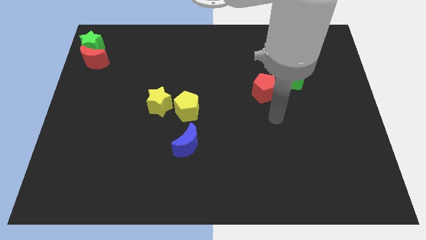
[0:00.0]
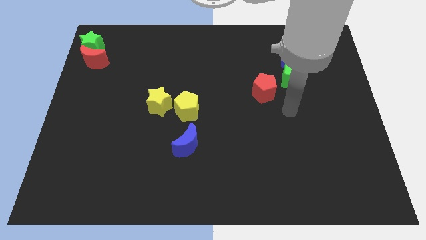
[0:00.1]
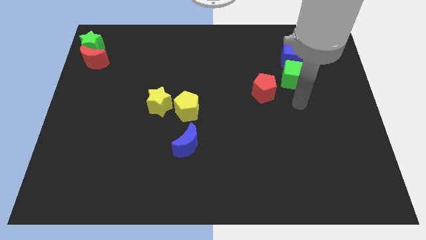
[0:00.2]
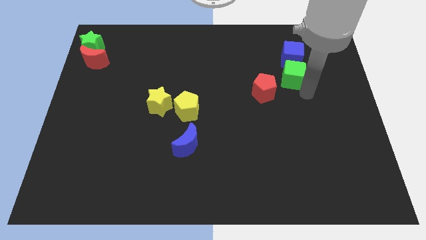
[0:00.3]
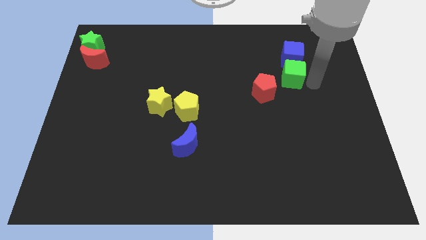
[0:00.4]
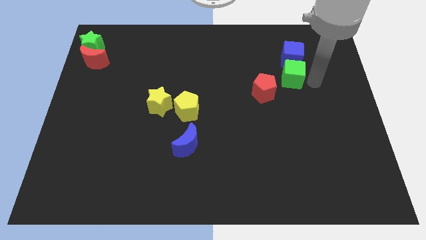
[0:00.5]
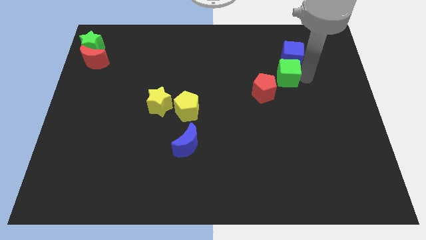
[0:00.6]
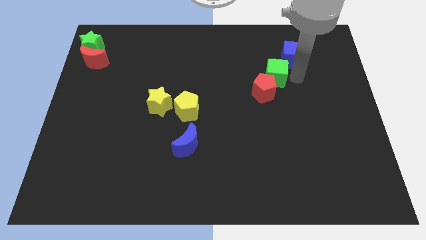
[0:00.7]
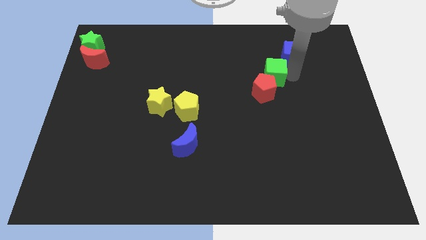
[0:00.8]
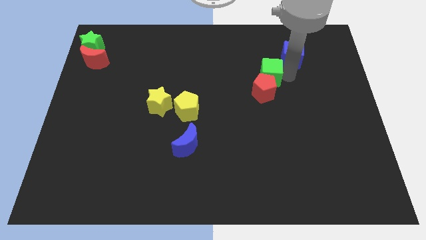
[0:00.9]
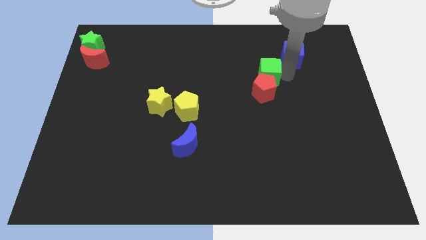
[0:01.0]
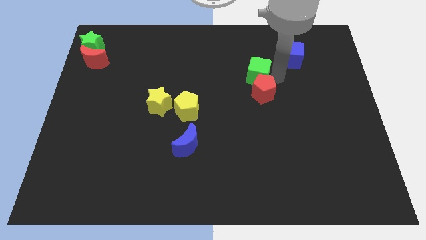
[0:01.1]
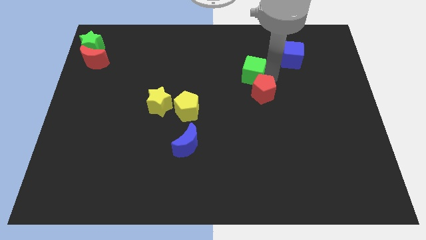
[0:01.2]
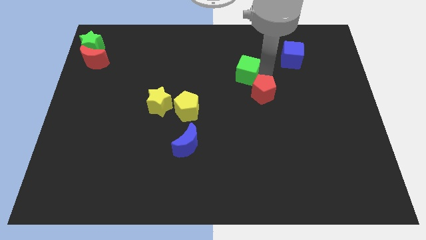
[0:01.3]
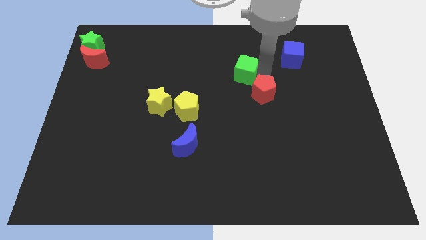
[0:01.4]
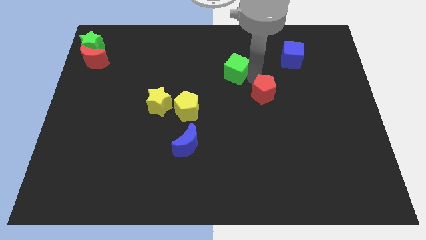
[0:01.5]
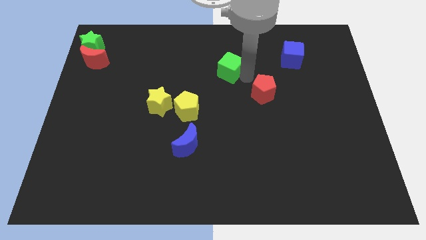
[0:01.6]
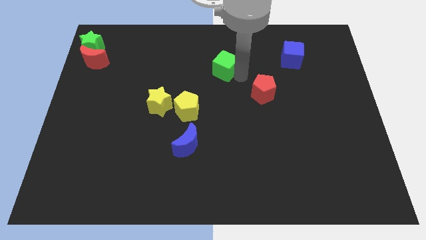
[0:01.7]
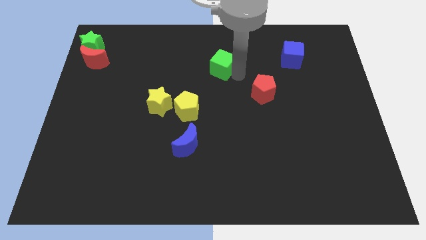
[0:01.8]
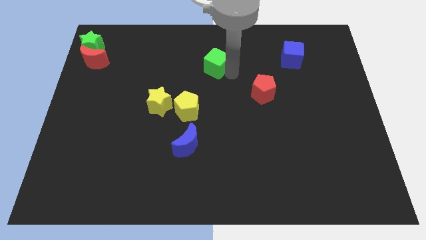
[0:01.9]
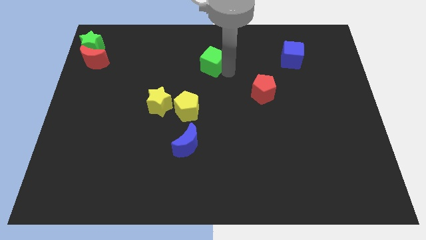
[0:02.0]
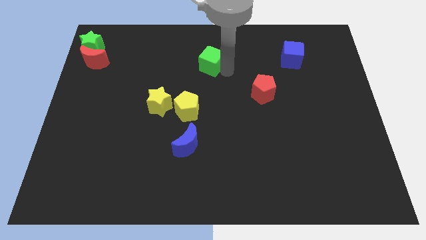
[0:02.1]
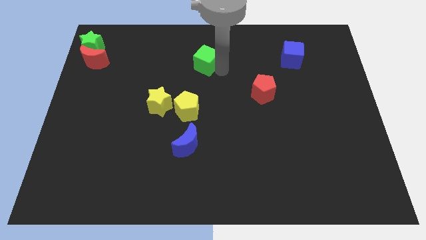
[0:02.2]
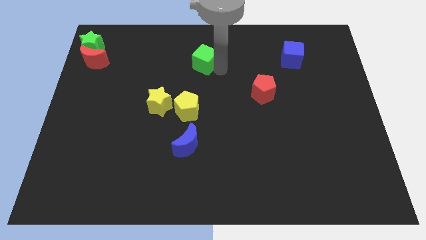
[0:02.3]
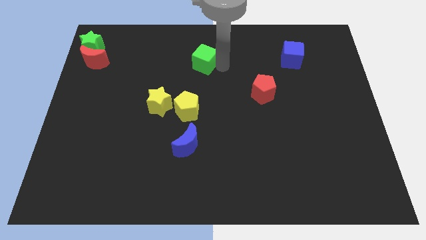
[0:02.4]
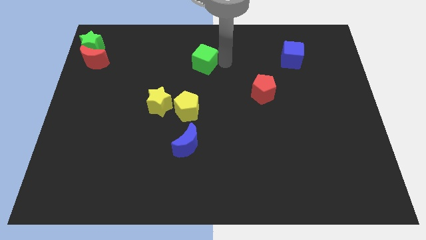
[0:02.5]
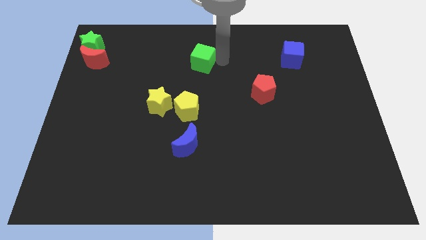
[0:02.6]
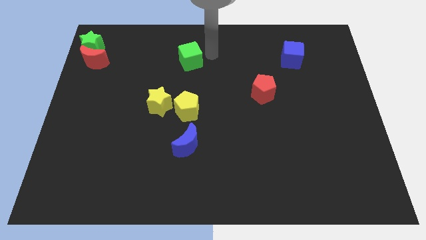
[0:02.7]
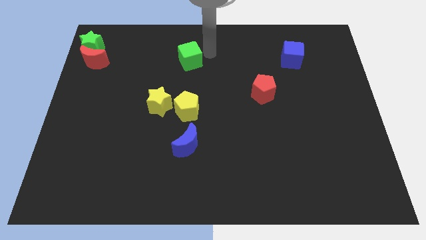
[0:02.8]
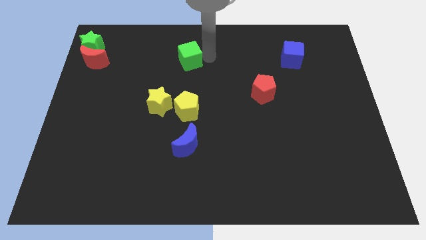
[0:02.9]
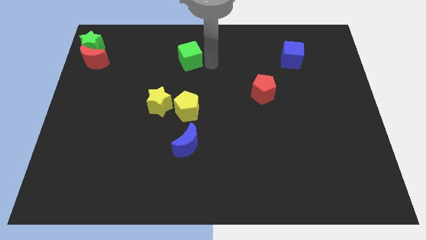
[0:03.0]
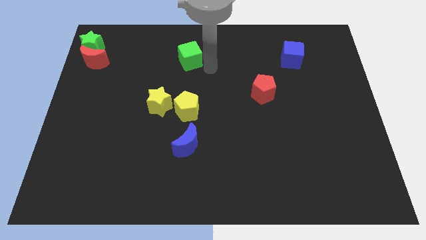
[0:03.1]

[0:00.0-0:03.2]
slide the green cube diagonally top left to the red pentagon

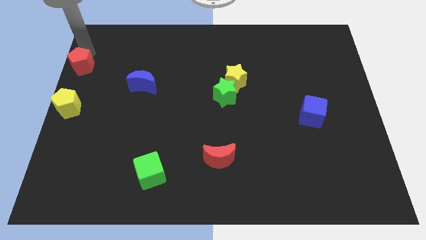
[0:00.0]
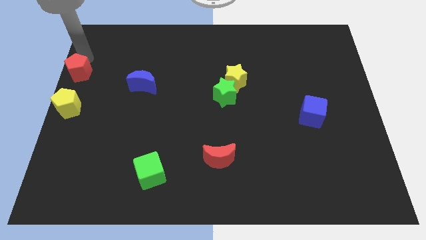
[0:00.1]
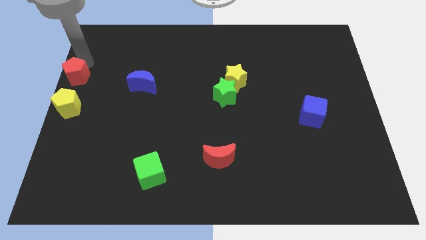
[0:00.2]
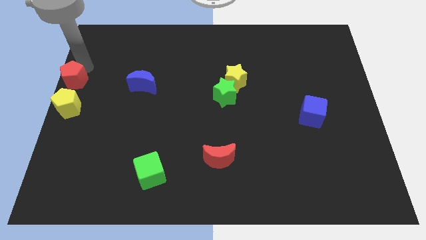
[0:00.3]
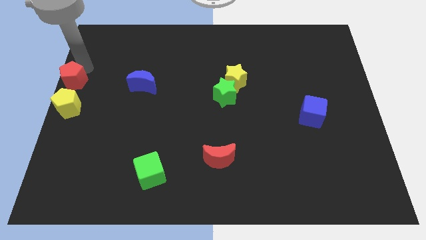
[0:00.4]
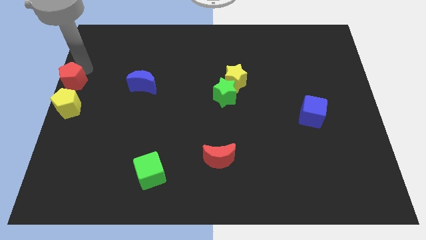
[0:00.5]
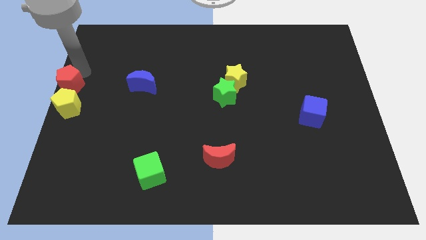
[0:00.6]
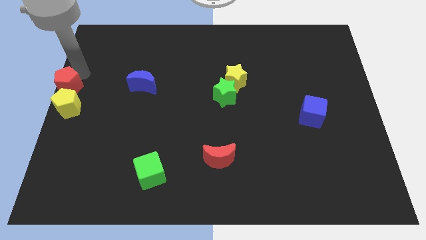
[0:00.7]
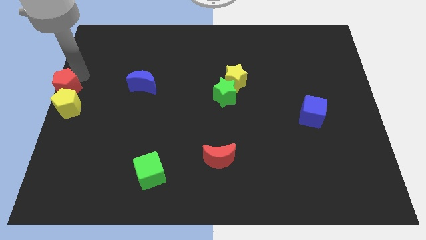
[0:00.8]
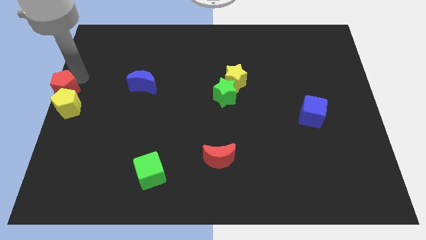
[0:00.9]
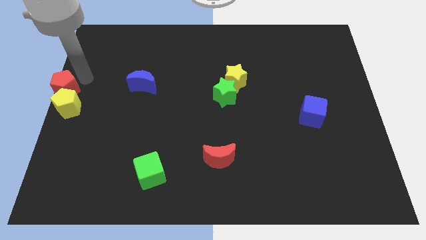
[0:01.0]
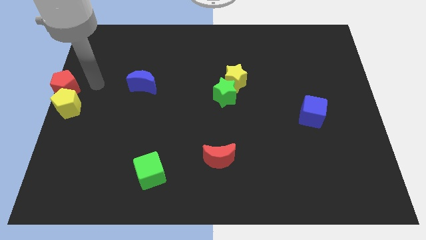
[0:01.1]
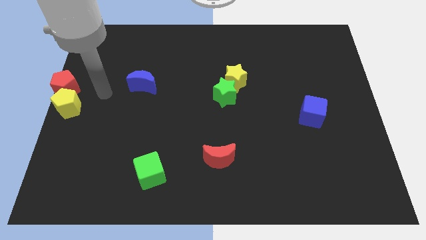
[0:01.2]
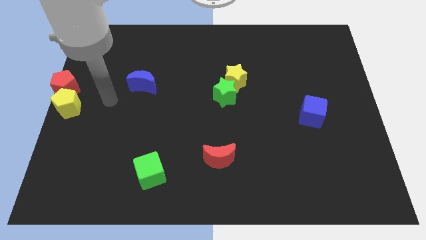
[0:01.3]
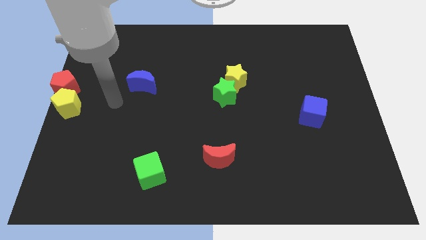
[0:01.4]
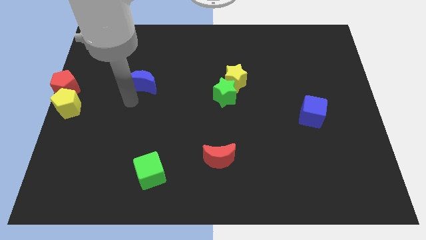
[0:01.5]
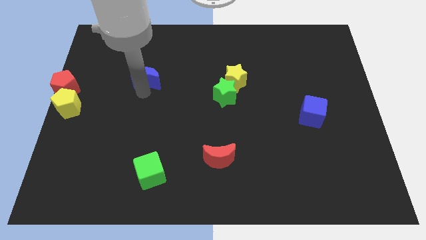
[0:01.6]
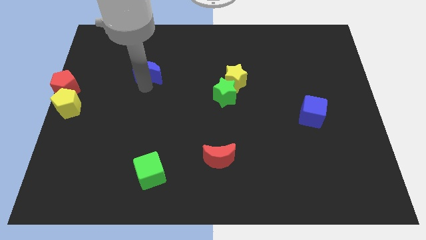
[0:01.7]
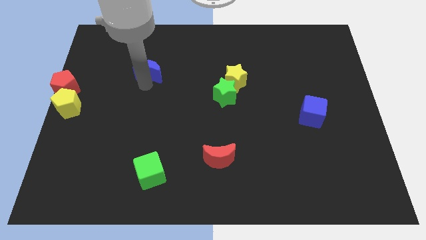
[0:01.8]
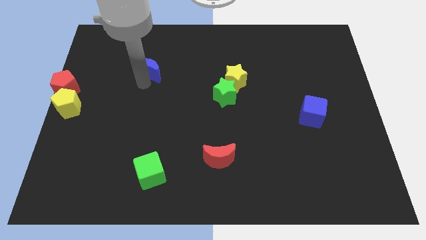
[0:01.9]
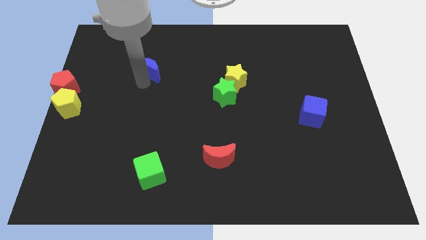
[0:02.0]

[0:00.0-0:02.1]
move red pentagon close to yellow pentagon

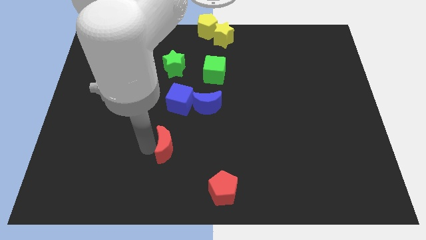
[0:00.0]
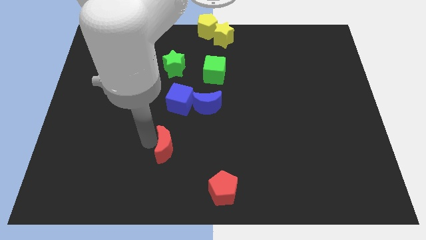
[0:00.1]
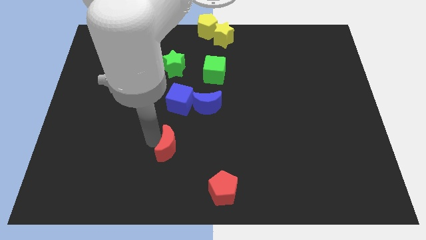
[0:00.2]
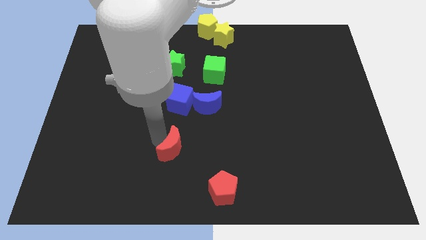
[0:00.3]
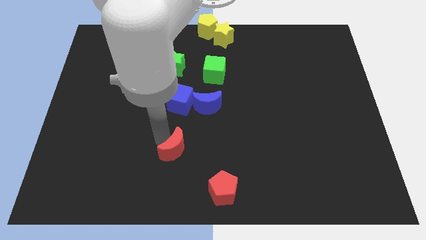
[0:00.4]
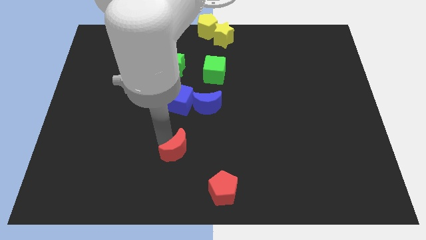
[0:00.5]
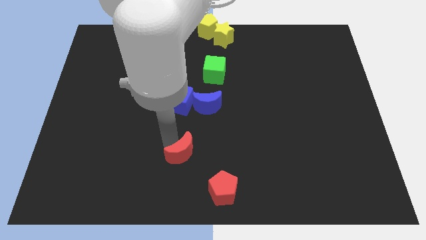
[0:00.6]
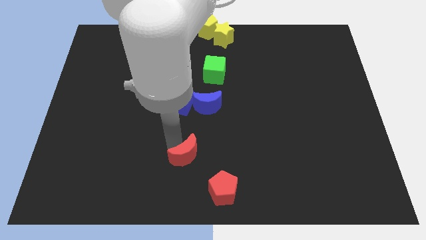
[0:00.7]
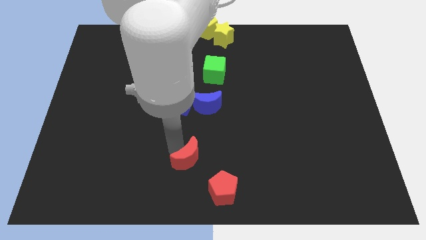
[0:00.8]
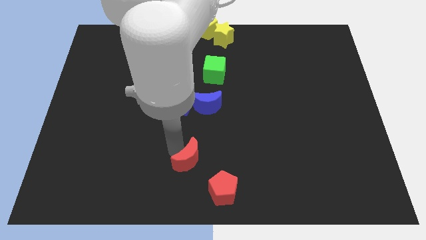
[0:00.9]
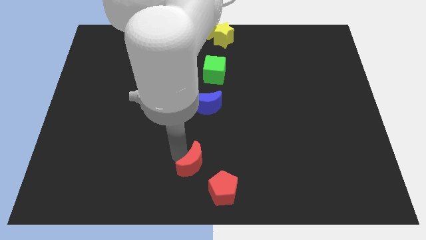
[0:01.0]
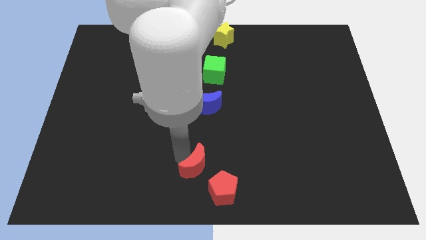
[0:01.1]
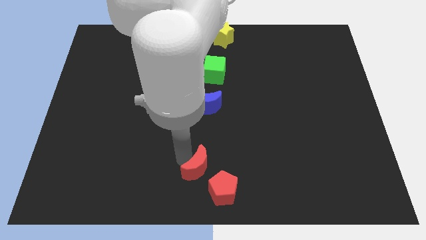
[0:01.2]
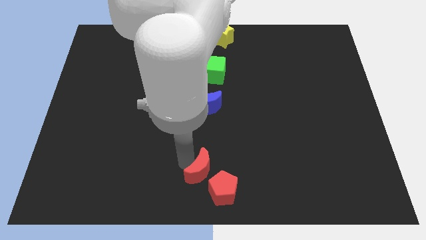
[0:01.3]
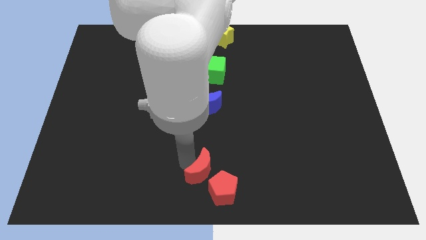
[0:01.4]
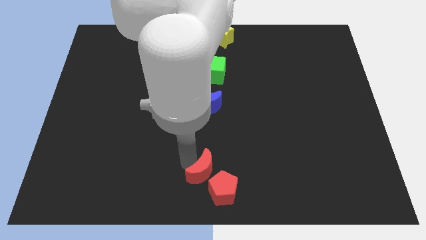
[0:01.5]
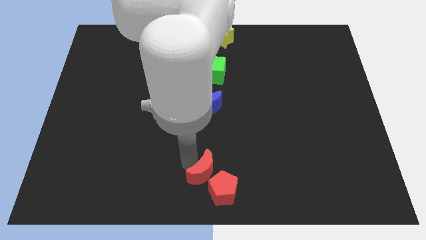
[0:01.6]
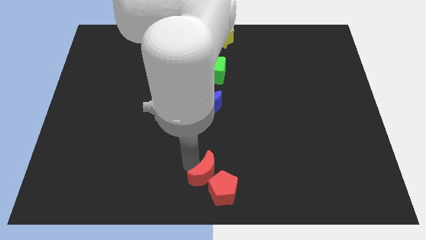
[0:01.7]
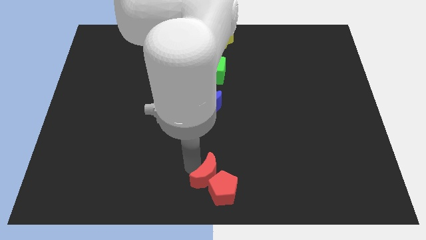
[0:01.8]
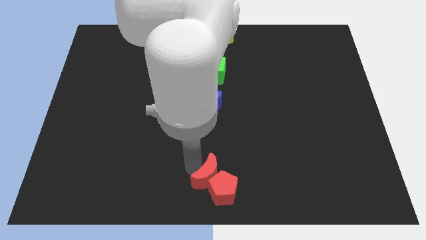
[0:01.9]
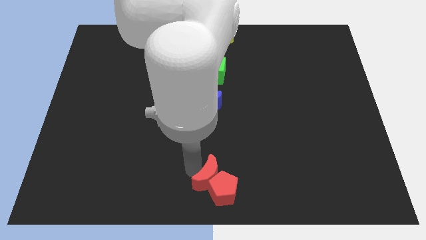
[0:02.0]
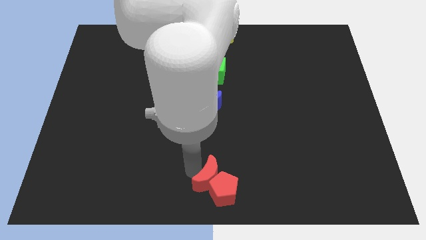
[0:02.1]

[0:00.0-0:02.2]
push the red moon closer to the red pentagon

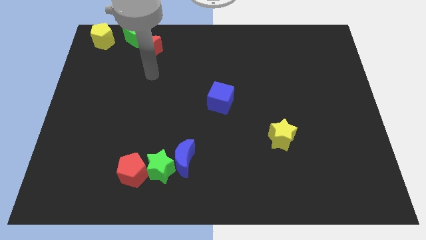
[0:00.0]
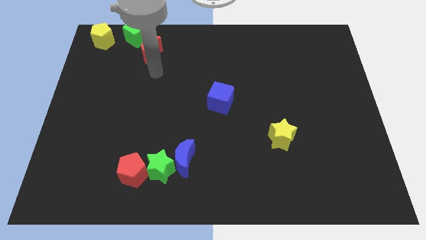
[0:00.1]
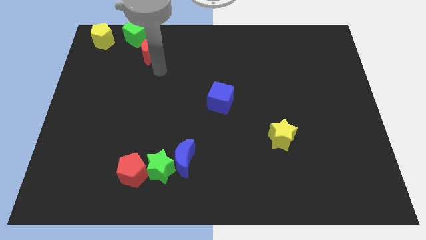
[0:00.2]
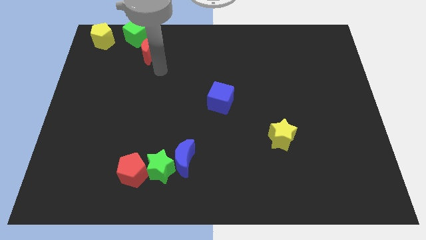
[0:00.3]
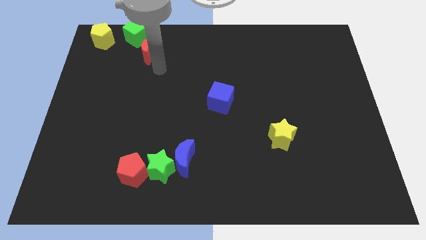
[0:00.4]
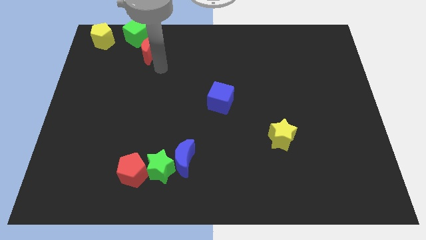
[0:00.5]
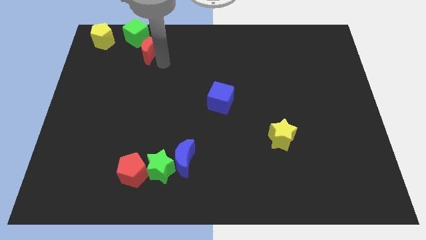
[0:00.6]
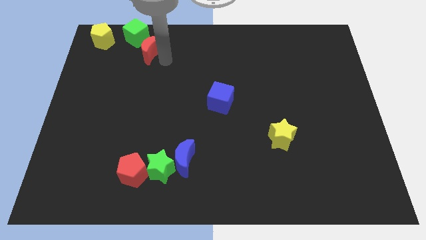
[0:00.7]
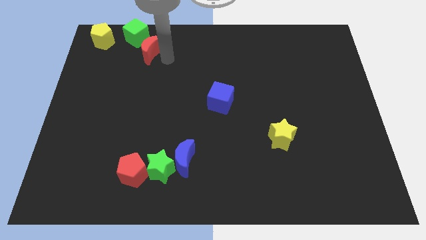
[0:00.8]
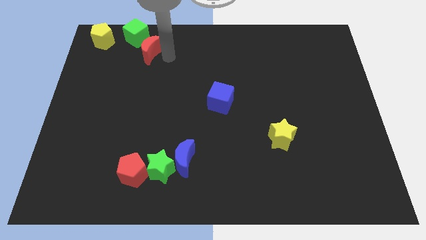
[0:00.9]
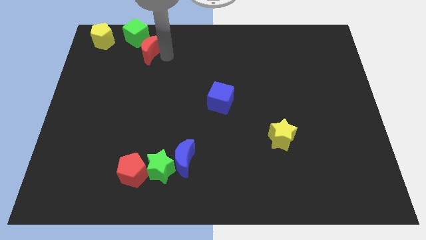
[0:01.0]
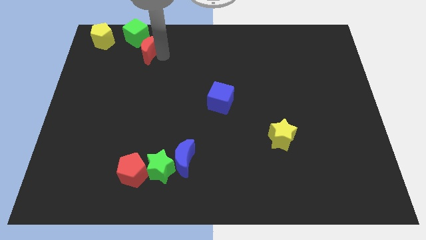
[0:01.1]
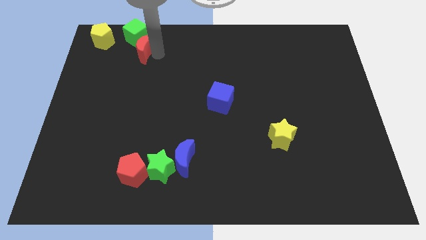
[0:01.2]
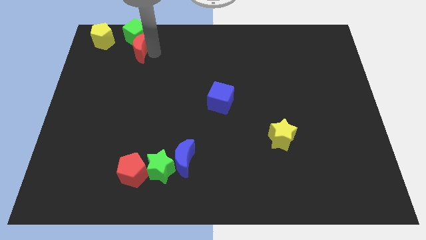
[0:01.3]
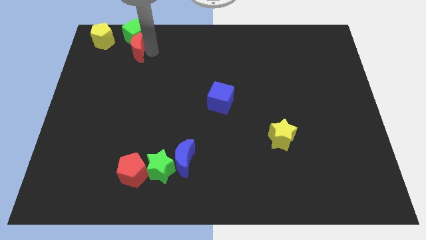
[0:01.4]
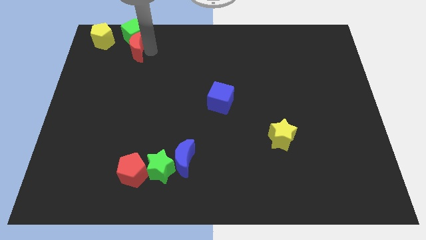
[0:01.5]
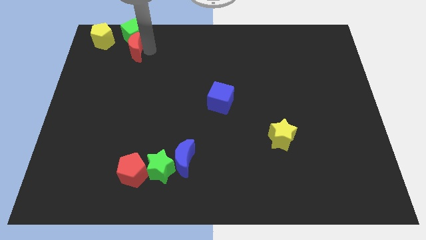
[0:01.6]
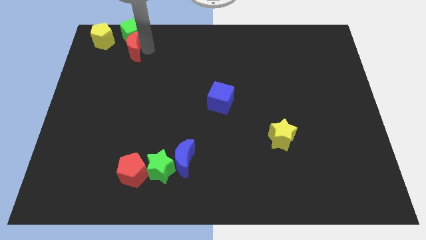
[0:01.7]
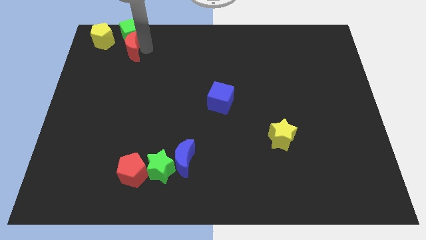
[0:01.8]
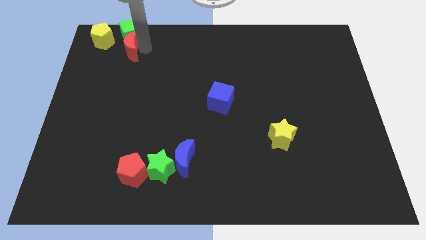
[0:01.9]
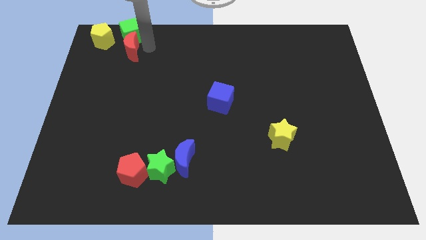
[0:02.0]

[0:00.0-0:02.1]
move red moon and green cube towards yellow pentagon
